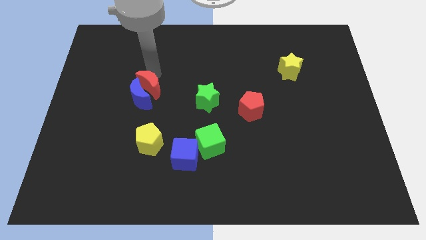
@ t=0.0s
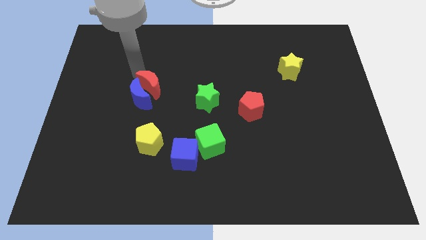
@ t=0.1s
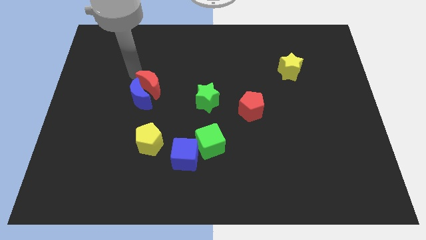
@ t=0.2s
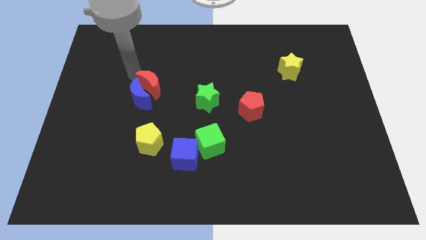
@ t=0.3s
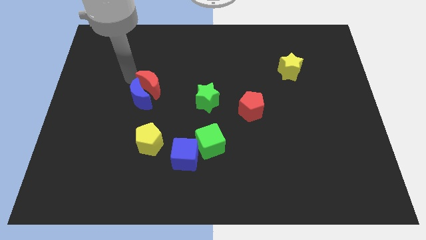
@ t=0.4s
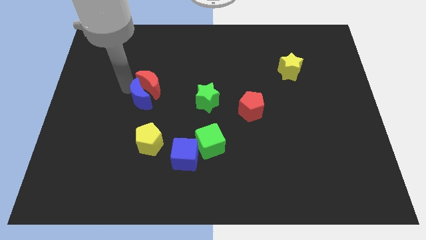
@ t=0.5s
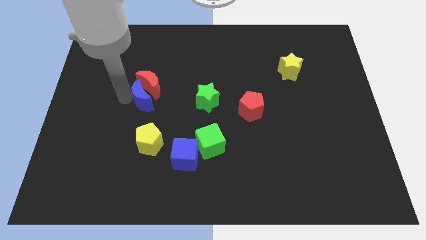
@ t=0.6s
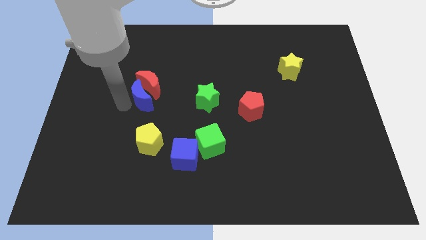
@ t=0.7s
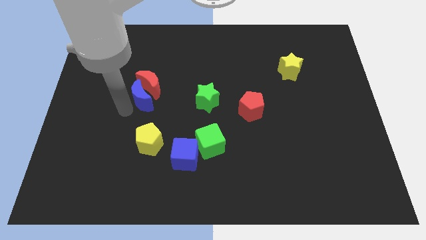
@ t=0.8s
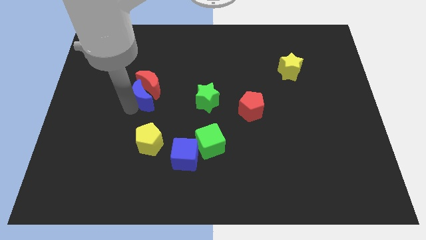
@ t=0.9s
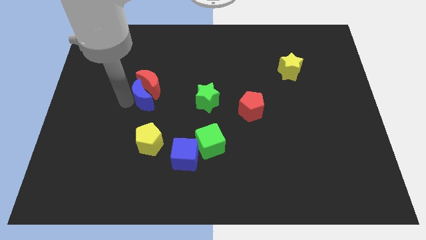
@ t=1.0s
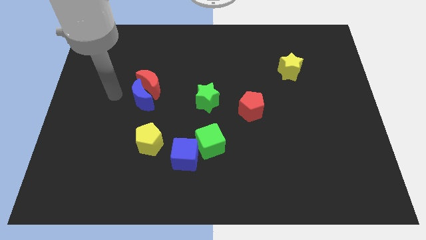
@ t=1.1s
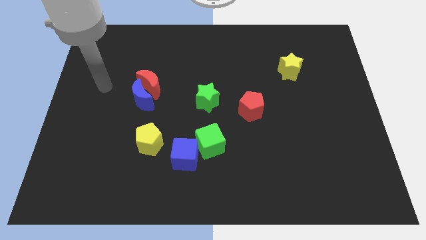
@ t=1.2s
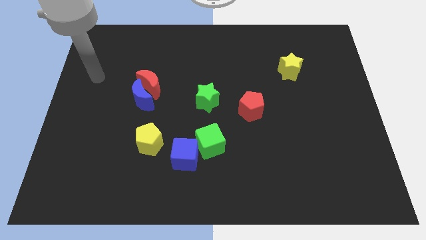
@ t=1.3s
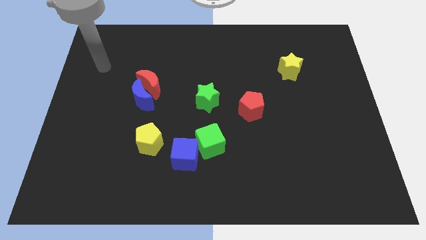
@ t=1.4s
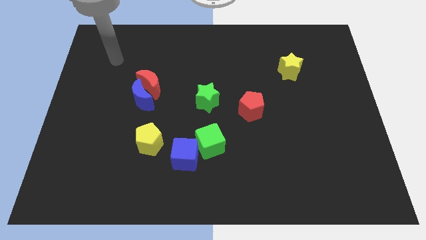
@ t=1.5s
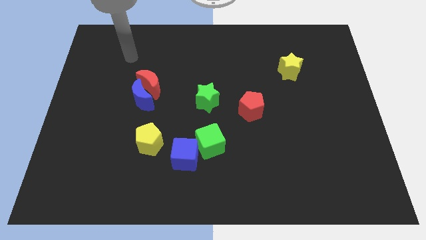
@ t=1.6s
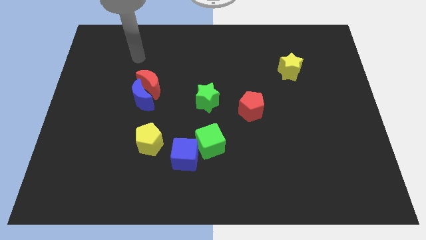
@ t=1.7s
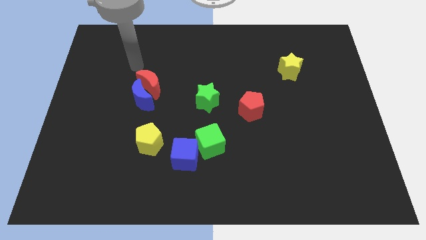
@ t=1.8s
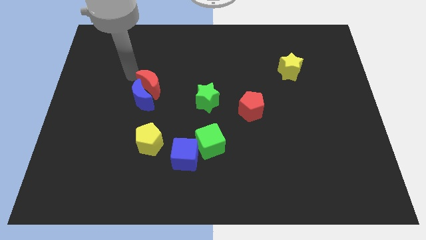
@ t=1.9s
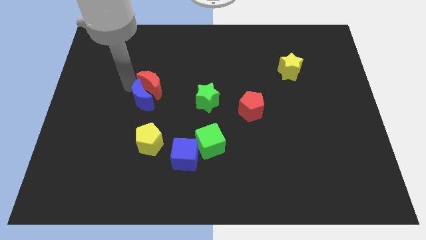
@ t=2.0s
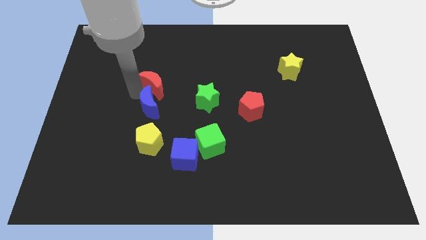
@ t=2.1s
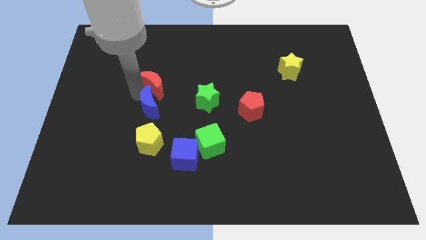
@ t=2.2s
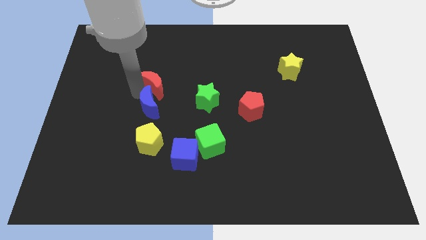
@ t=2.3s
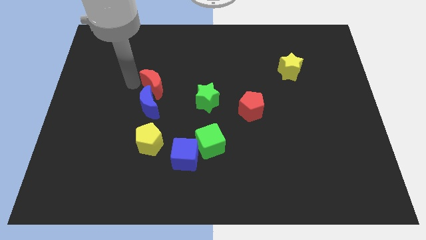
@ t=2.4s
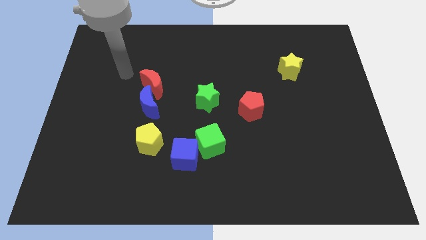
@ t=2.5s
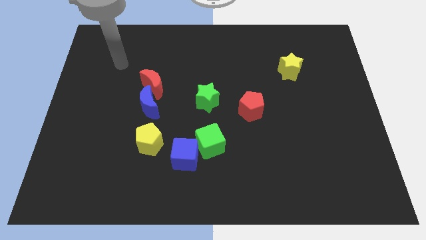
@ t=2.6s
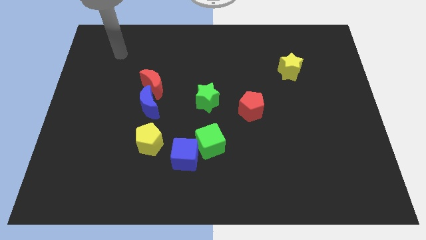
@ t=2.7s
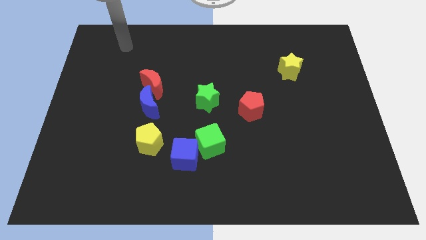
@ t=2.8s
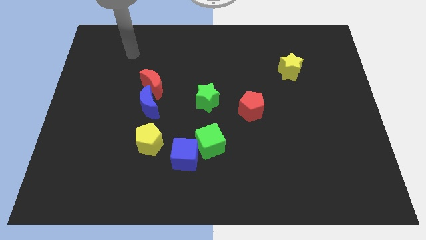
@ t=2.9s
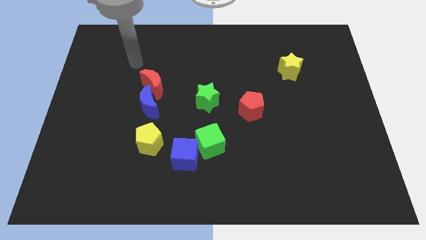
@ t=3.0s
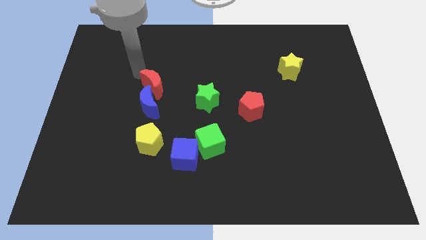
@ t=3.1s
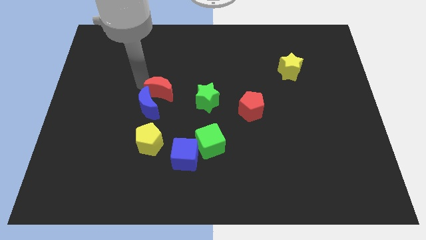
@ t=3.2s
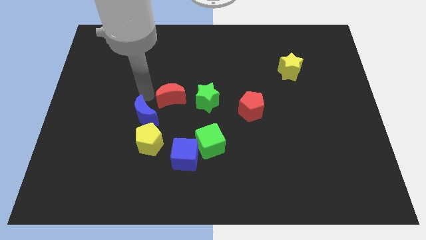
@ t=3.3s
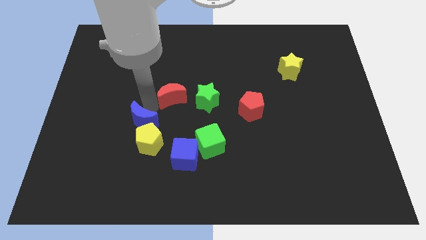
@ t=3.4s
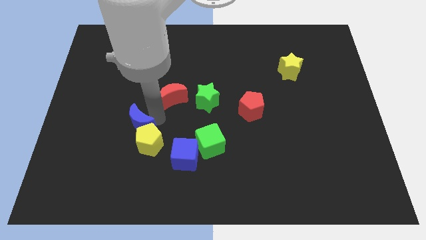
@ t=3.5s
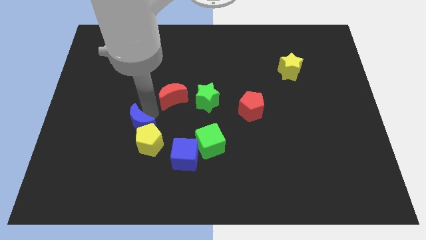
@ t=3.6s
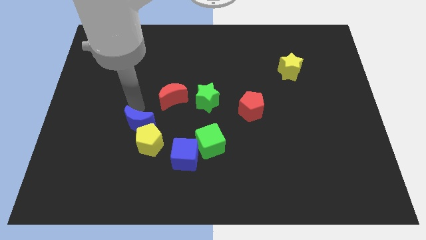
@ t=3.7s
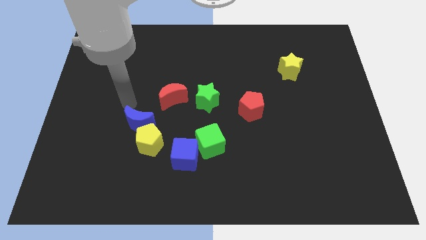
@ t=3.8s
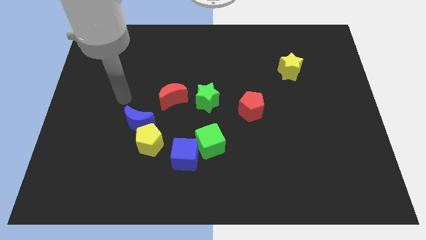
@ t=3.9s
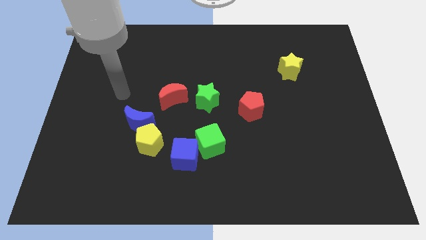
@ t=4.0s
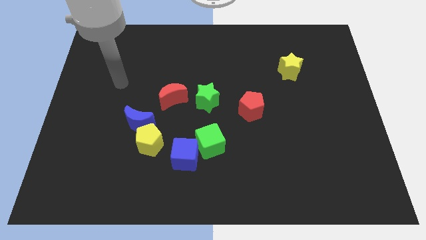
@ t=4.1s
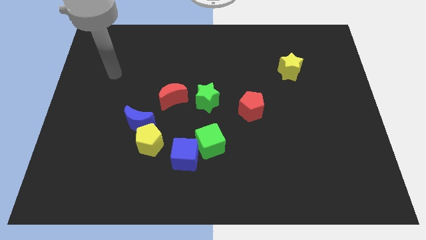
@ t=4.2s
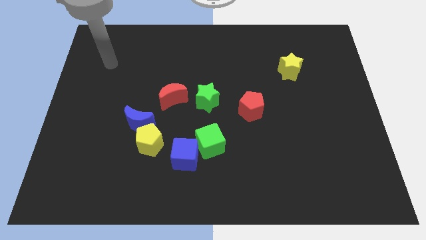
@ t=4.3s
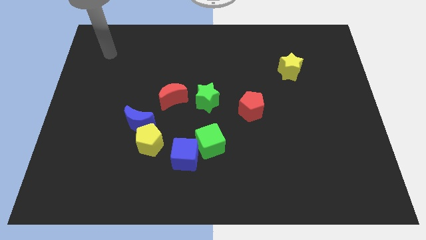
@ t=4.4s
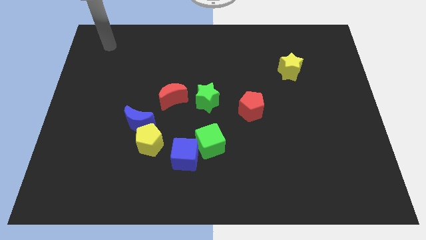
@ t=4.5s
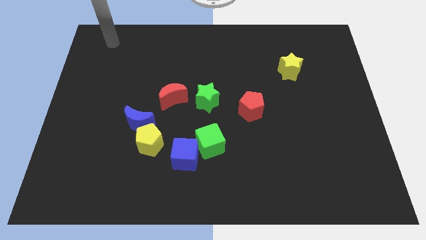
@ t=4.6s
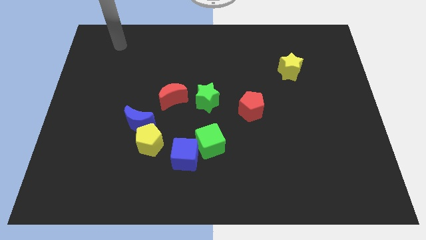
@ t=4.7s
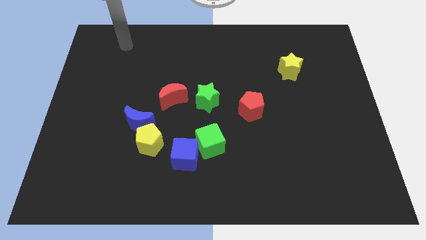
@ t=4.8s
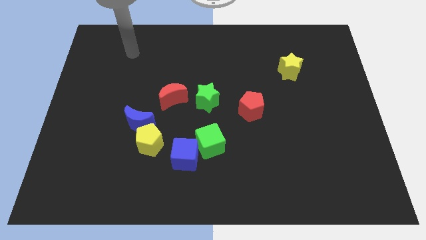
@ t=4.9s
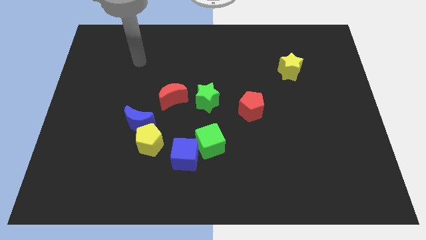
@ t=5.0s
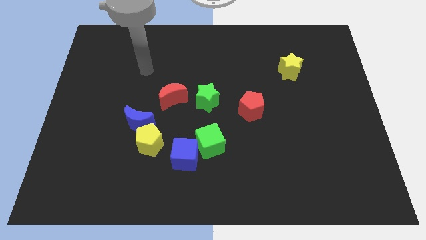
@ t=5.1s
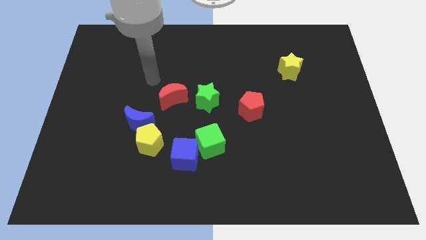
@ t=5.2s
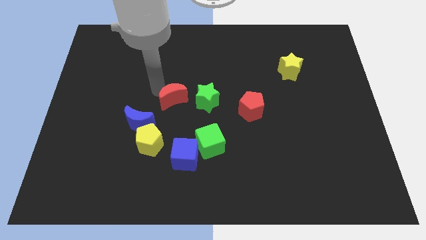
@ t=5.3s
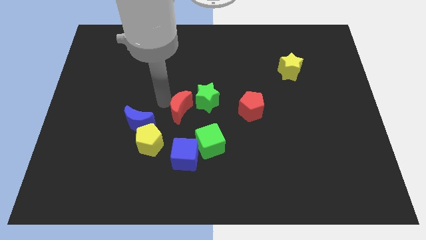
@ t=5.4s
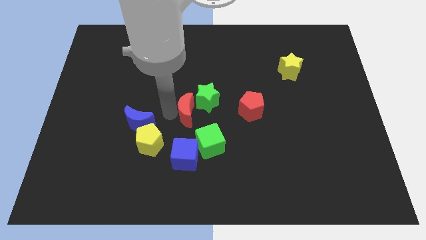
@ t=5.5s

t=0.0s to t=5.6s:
separate the red crescent and the blue crescent

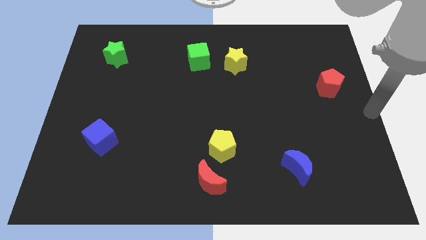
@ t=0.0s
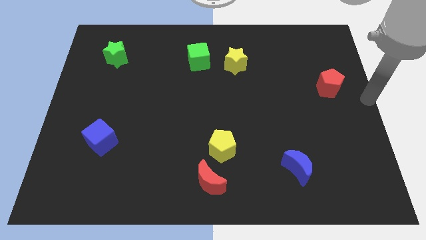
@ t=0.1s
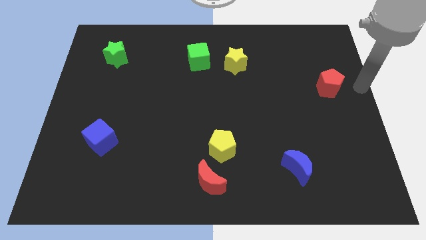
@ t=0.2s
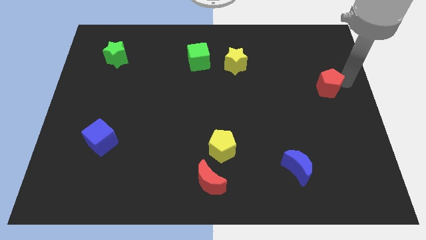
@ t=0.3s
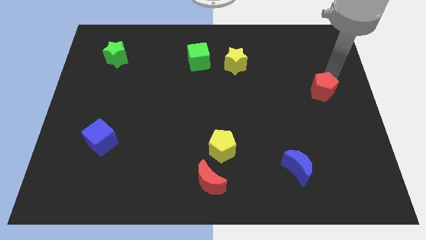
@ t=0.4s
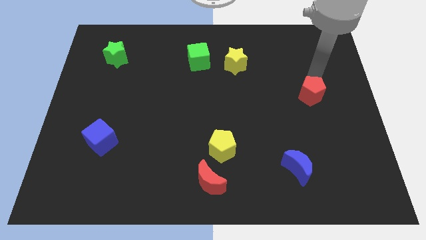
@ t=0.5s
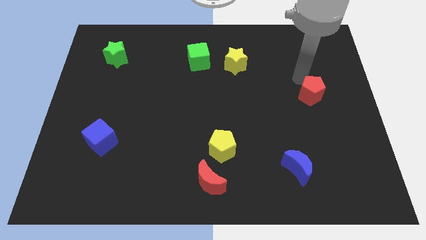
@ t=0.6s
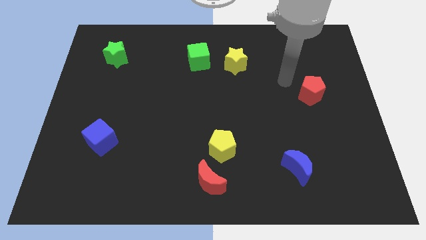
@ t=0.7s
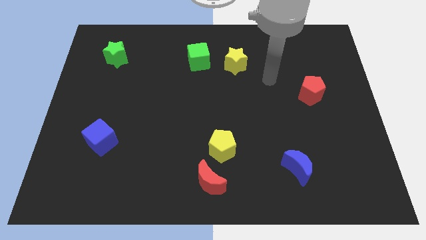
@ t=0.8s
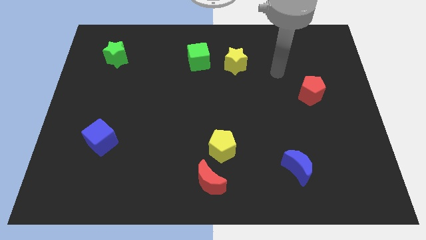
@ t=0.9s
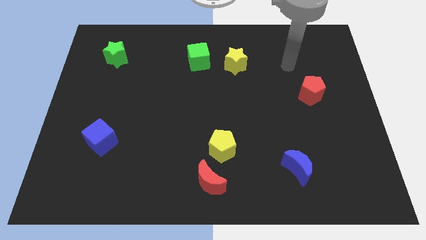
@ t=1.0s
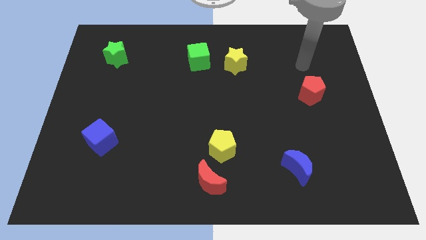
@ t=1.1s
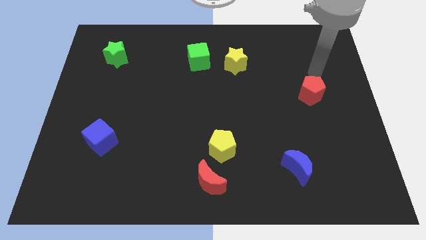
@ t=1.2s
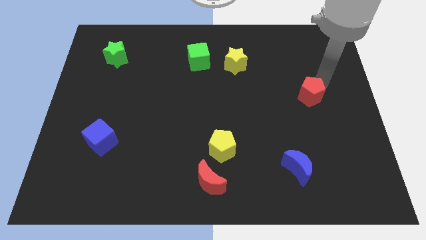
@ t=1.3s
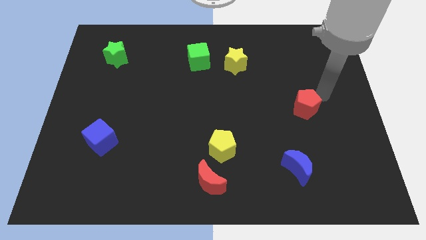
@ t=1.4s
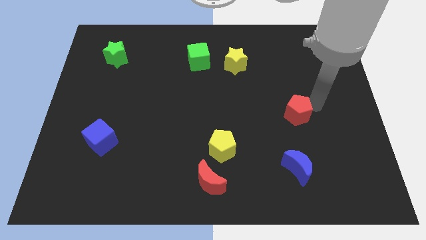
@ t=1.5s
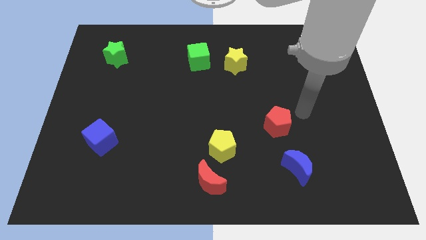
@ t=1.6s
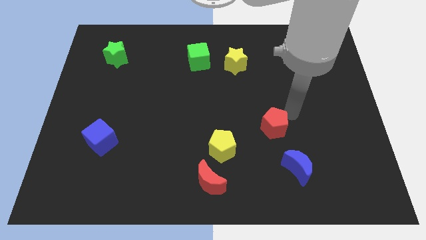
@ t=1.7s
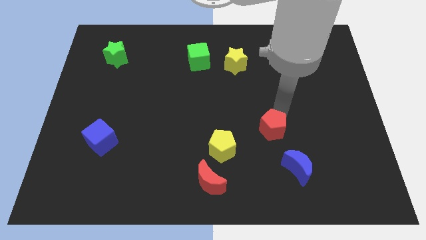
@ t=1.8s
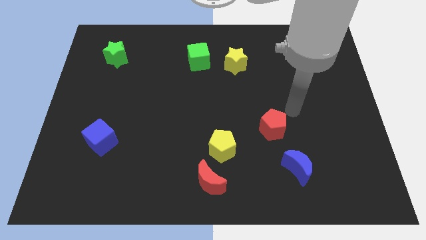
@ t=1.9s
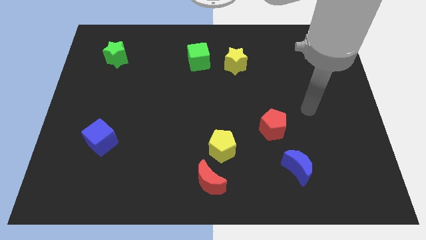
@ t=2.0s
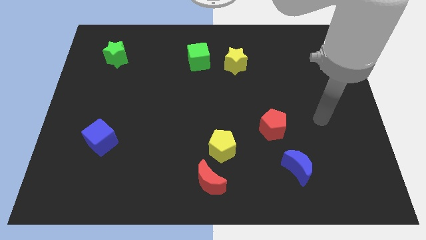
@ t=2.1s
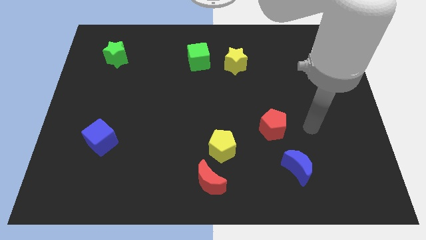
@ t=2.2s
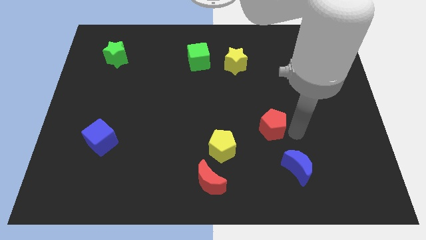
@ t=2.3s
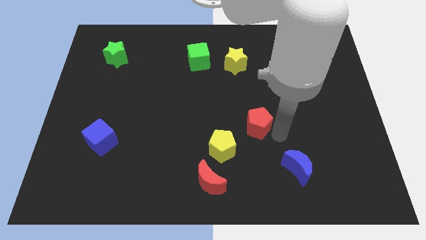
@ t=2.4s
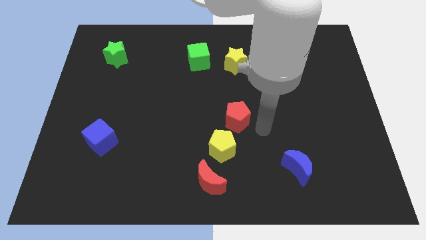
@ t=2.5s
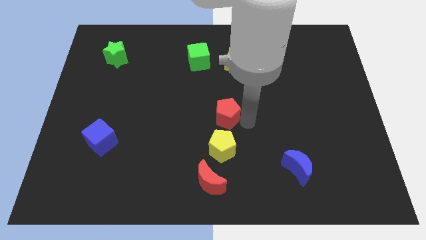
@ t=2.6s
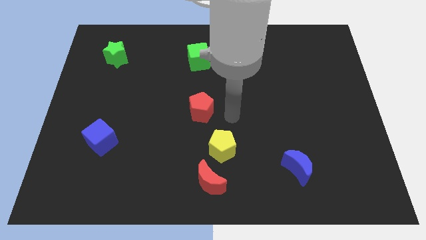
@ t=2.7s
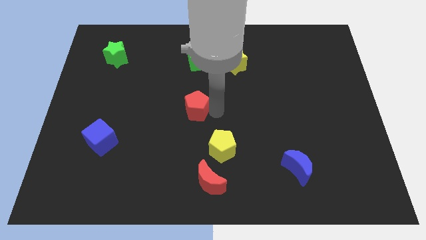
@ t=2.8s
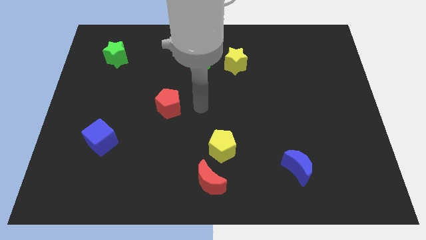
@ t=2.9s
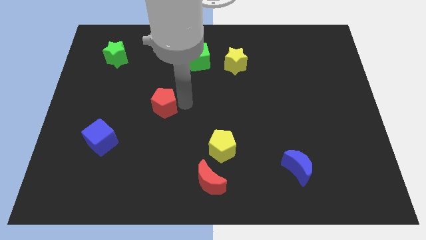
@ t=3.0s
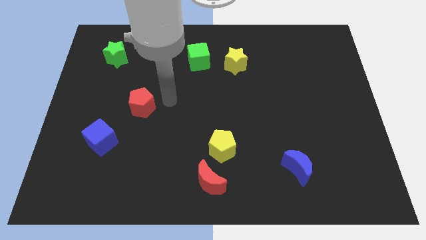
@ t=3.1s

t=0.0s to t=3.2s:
move the red pentagon diagonally top left to the blue moon
